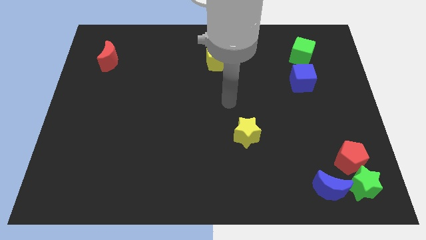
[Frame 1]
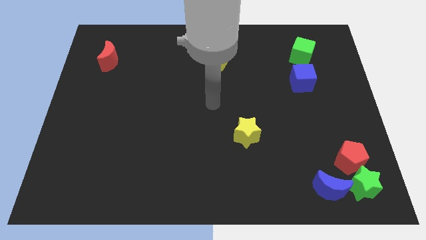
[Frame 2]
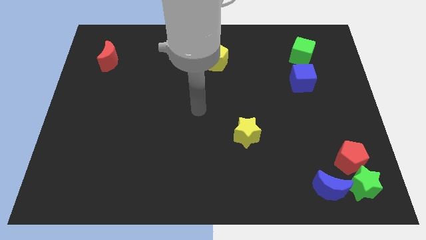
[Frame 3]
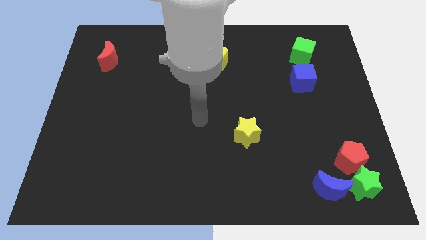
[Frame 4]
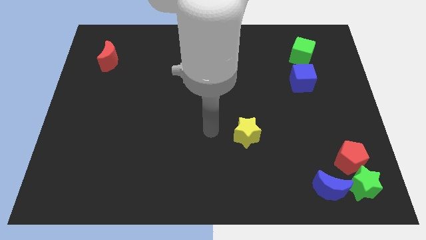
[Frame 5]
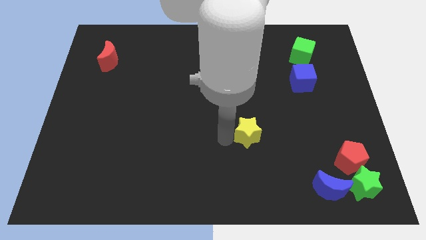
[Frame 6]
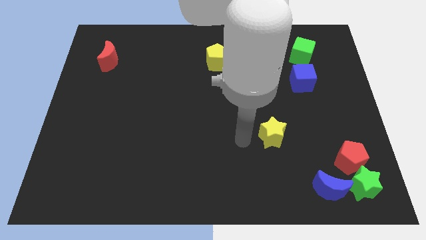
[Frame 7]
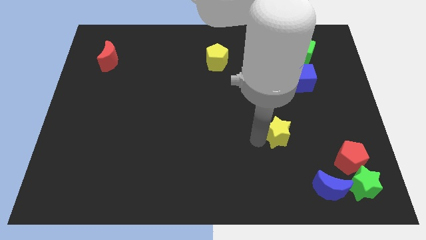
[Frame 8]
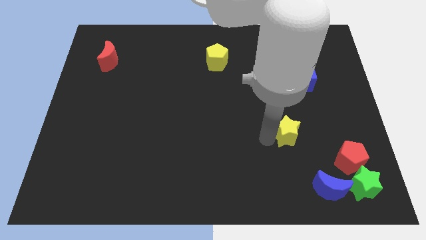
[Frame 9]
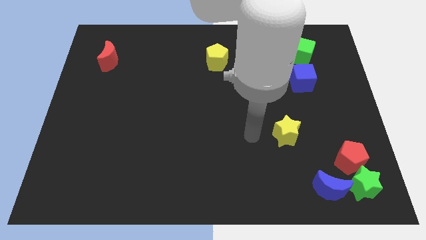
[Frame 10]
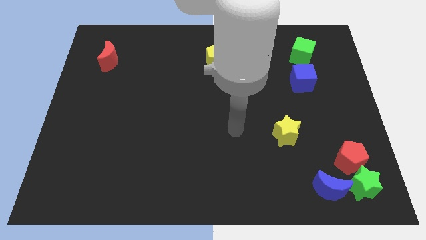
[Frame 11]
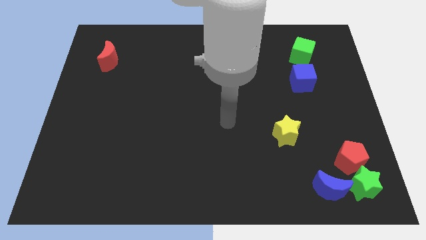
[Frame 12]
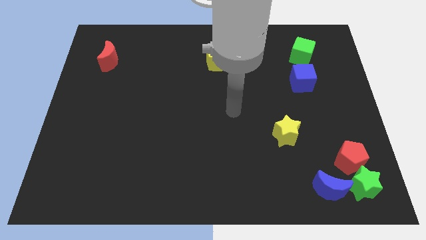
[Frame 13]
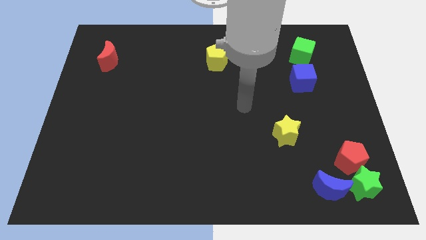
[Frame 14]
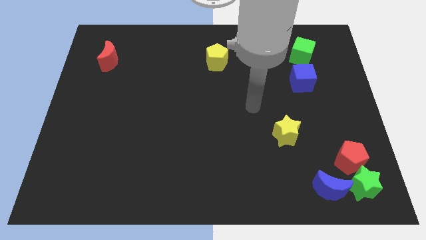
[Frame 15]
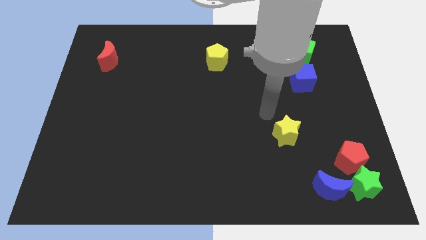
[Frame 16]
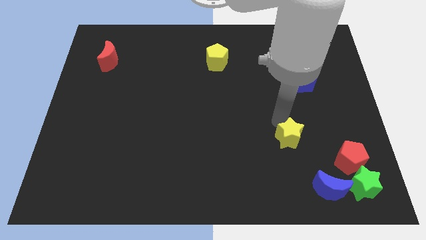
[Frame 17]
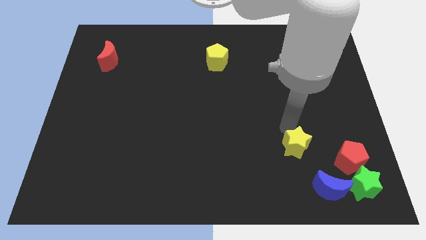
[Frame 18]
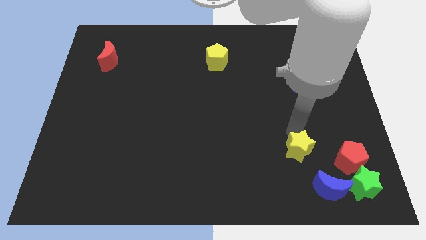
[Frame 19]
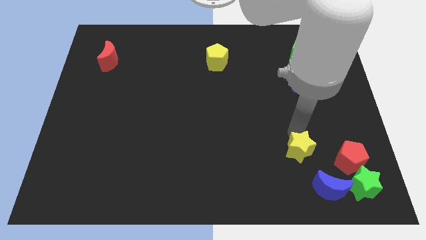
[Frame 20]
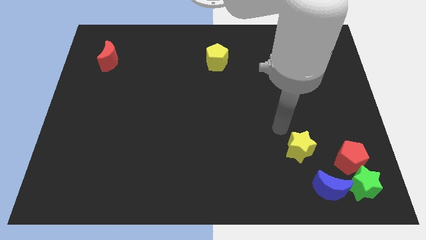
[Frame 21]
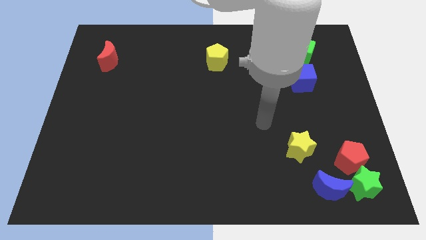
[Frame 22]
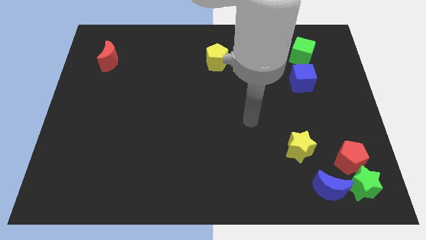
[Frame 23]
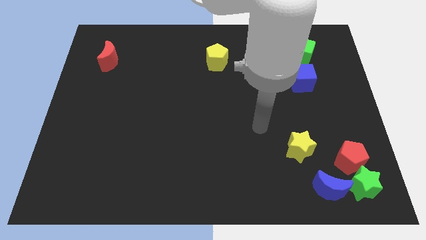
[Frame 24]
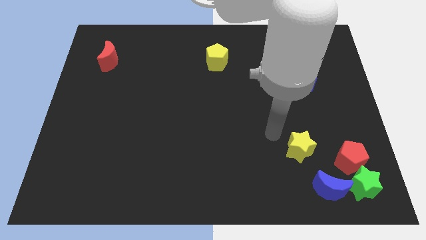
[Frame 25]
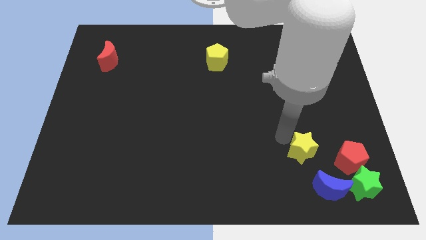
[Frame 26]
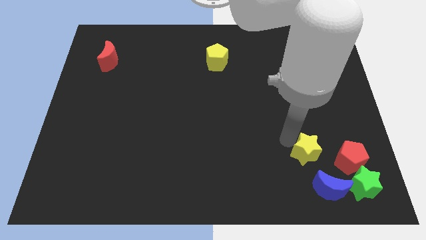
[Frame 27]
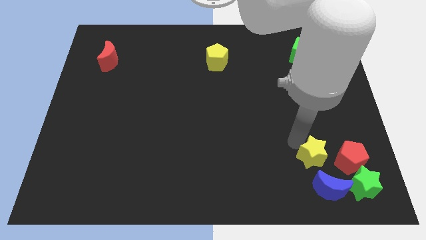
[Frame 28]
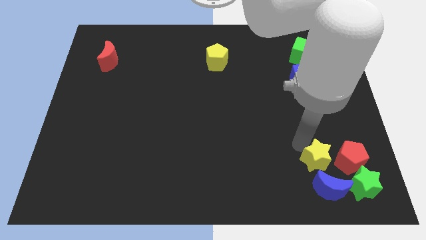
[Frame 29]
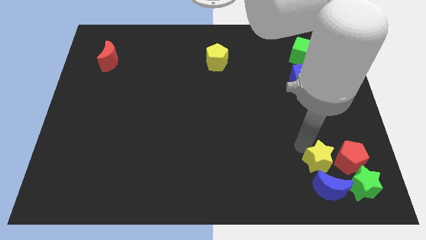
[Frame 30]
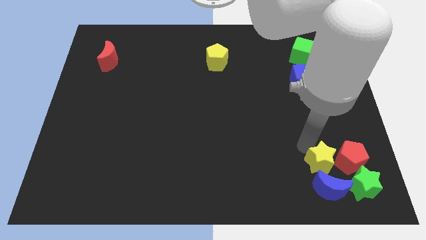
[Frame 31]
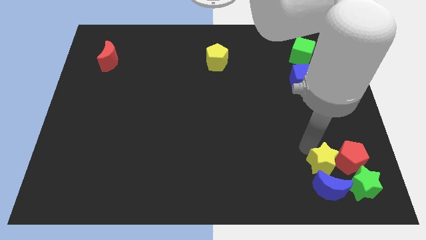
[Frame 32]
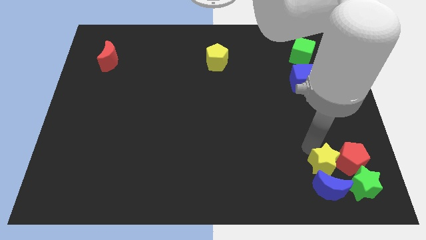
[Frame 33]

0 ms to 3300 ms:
drag the yellow star towards the top of the blue crescent

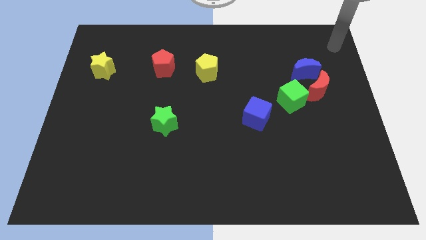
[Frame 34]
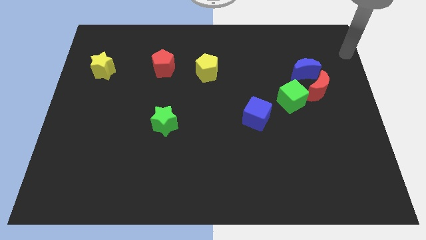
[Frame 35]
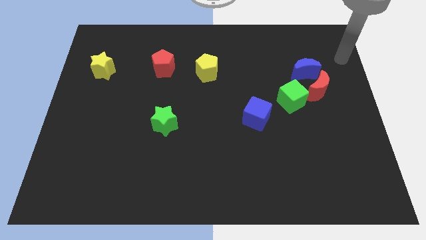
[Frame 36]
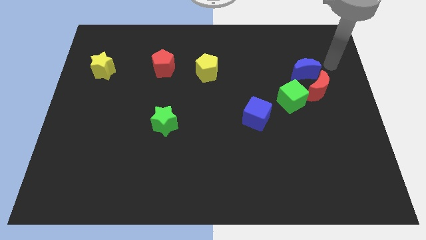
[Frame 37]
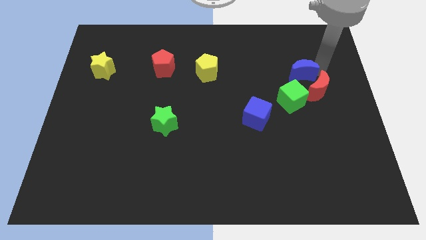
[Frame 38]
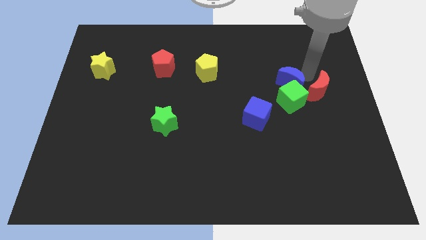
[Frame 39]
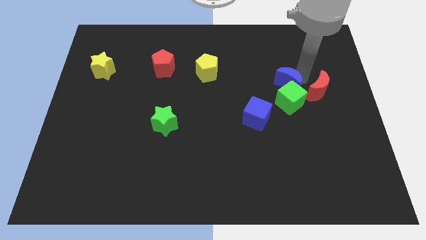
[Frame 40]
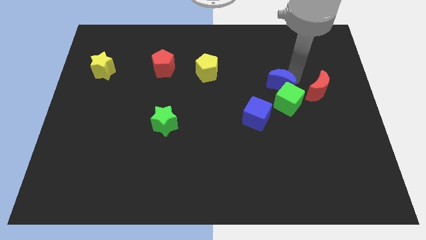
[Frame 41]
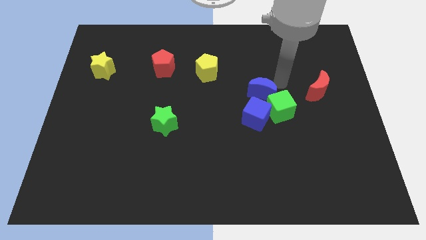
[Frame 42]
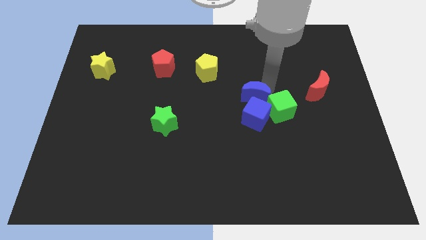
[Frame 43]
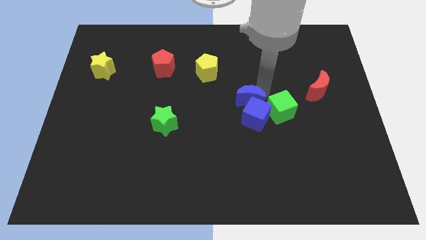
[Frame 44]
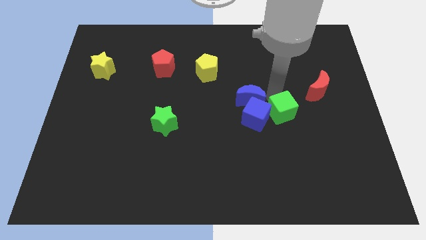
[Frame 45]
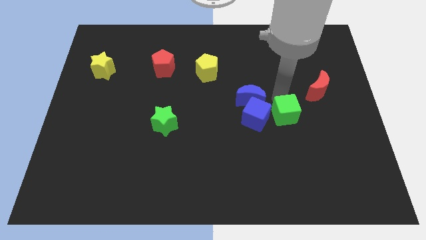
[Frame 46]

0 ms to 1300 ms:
push the blue moon into blue cube

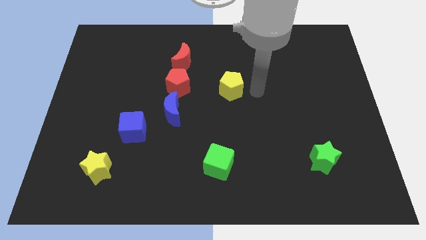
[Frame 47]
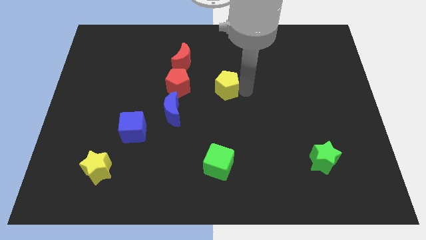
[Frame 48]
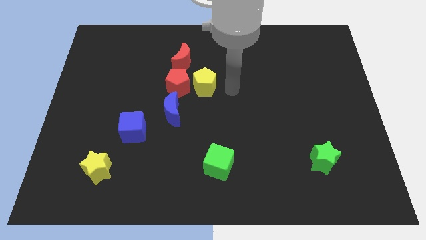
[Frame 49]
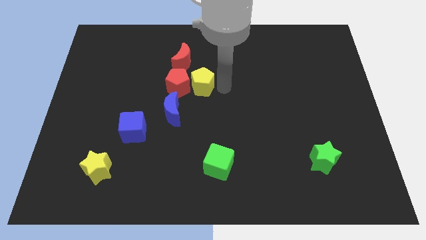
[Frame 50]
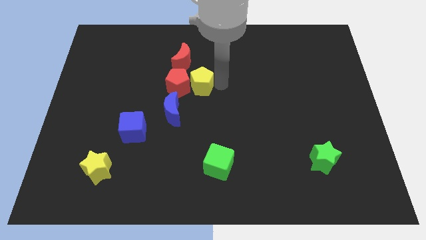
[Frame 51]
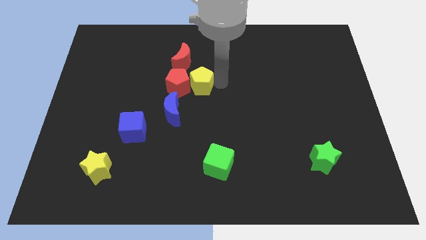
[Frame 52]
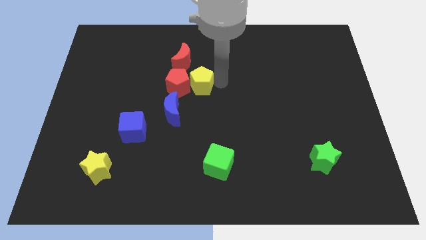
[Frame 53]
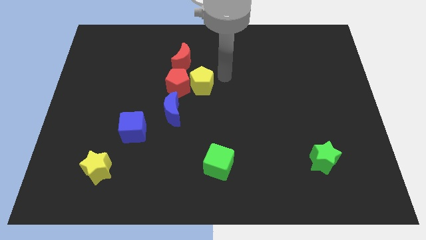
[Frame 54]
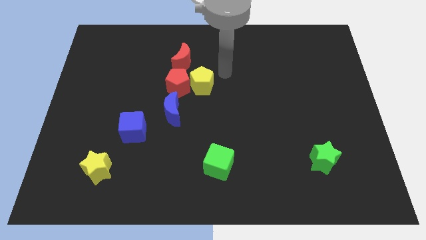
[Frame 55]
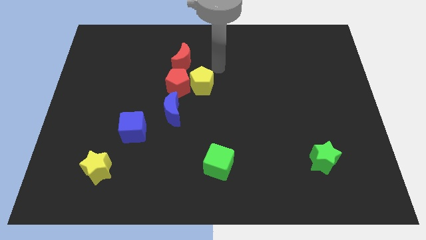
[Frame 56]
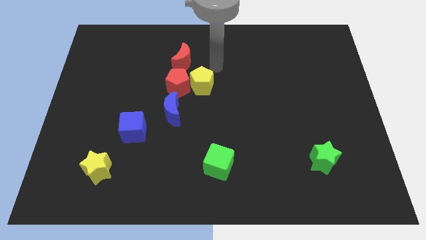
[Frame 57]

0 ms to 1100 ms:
push the yellow pentagon to the right of the red pentagon

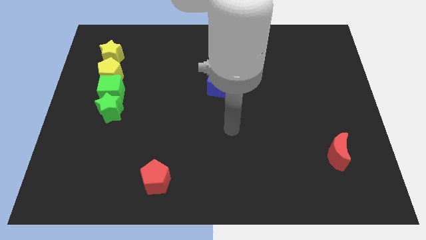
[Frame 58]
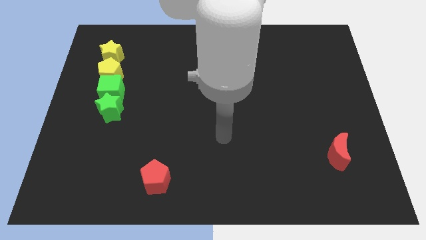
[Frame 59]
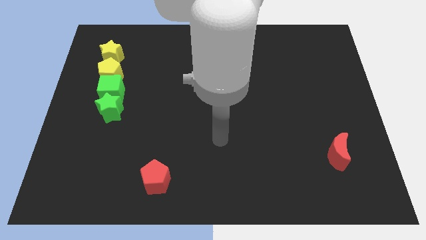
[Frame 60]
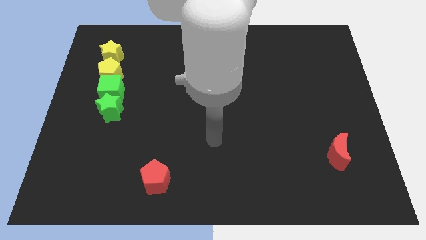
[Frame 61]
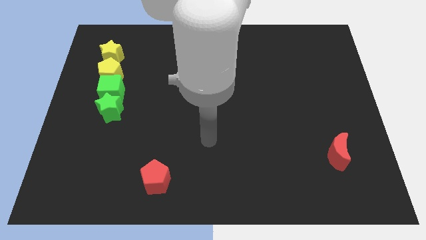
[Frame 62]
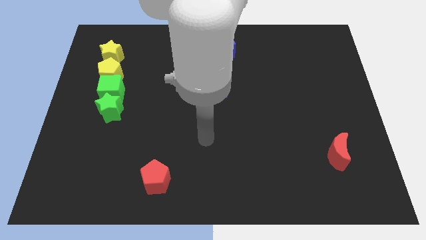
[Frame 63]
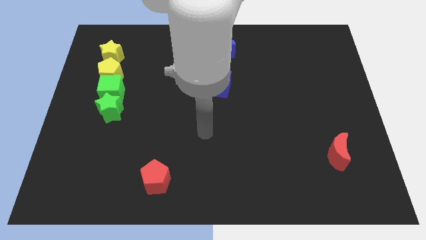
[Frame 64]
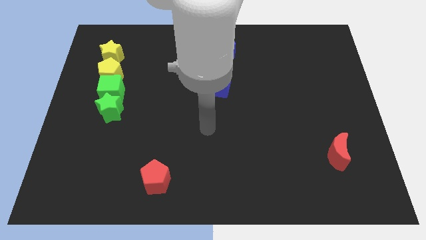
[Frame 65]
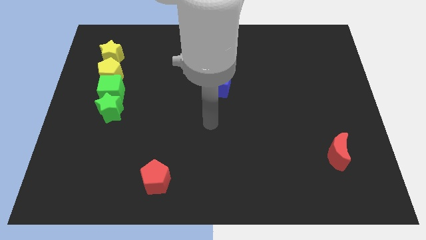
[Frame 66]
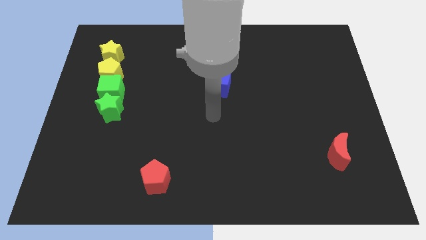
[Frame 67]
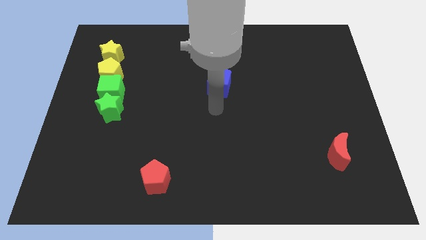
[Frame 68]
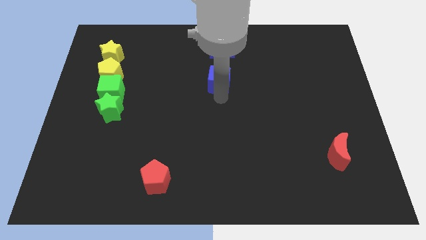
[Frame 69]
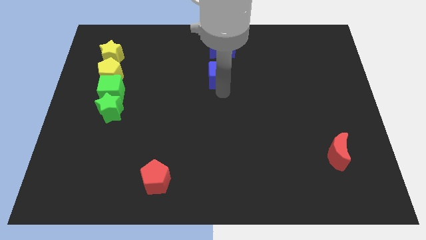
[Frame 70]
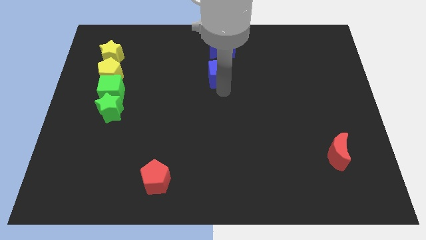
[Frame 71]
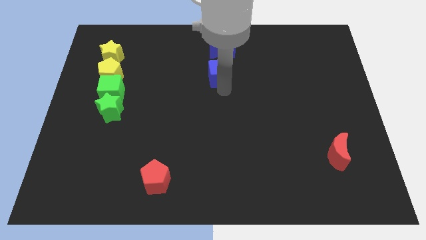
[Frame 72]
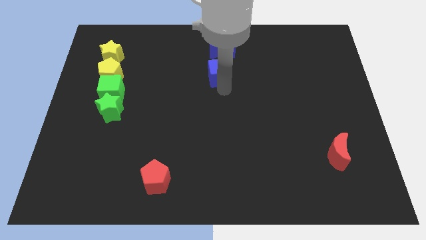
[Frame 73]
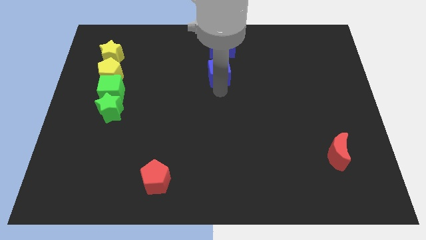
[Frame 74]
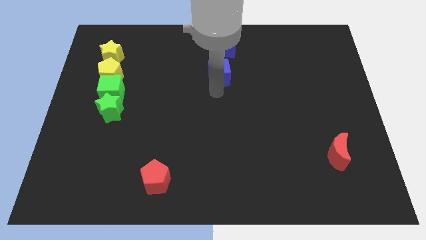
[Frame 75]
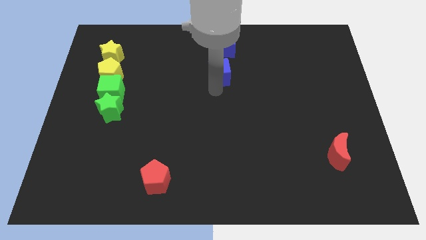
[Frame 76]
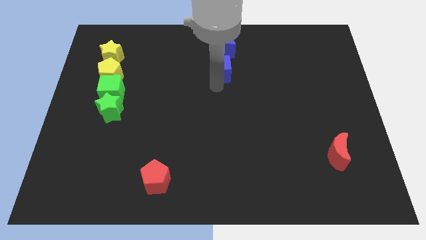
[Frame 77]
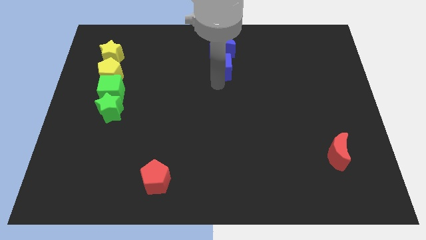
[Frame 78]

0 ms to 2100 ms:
place the blue cube below the blue crescent

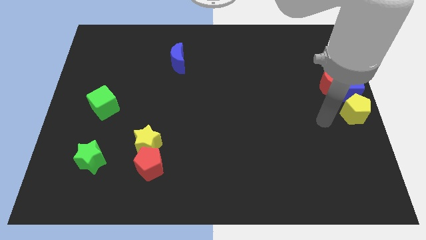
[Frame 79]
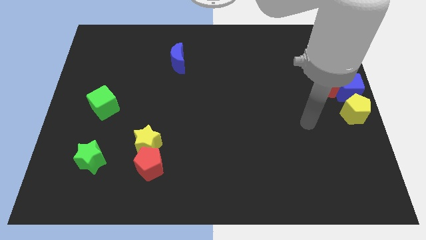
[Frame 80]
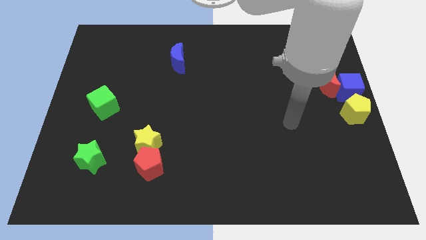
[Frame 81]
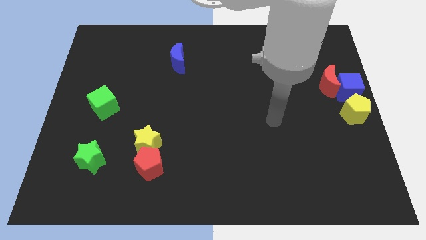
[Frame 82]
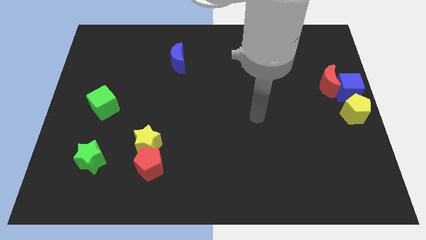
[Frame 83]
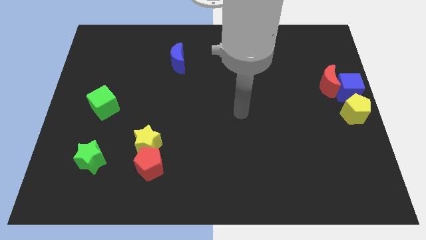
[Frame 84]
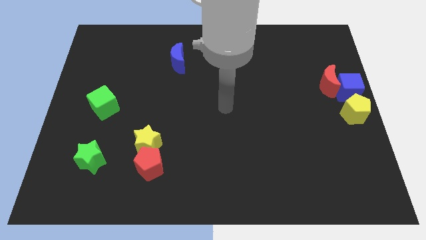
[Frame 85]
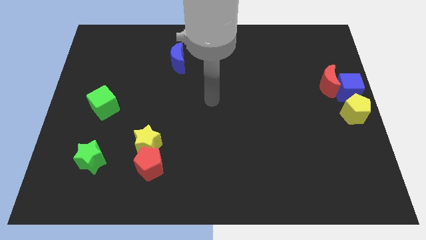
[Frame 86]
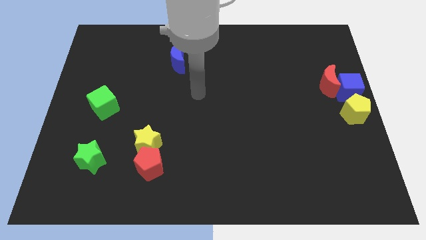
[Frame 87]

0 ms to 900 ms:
move arm at the center

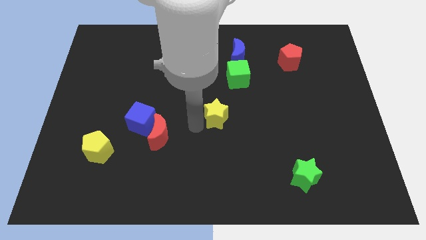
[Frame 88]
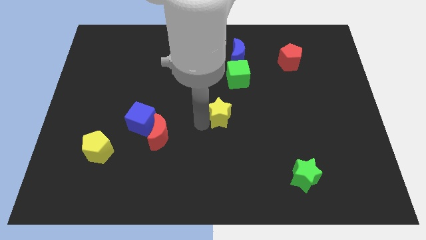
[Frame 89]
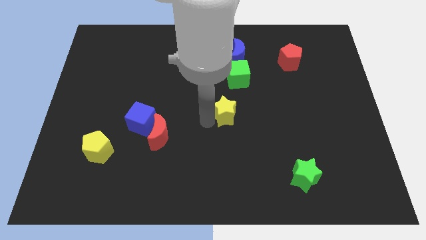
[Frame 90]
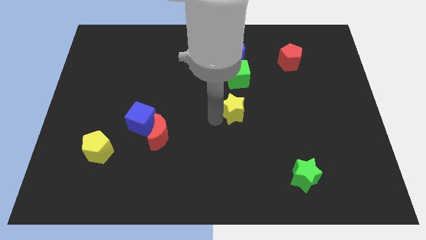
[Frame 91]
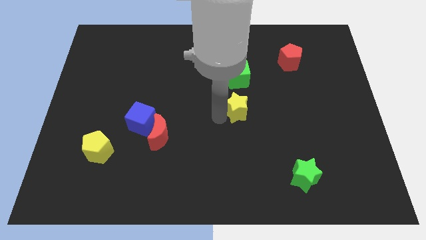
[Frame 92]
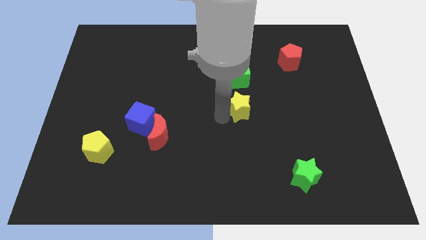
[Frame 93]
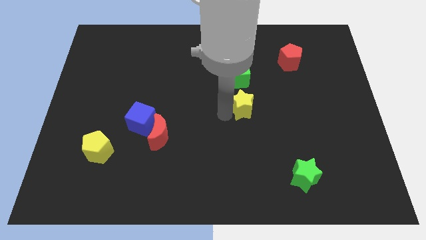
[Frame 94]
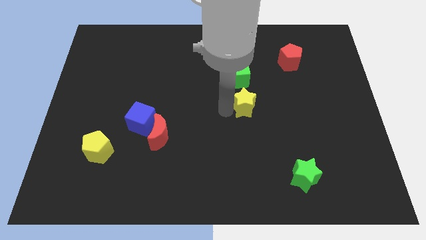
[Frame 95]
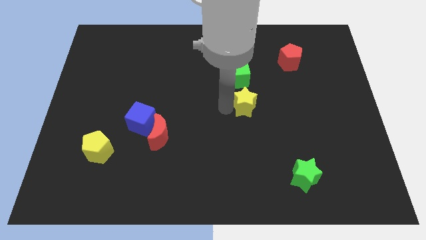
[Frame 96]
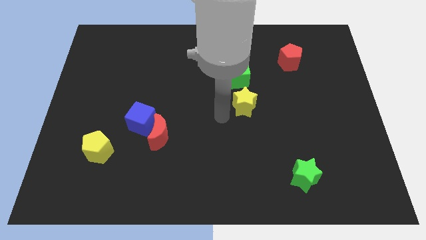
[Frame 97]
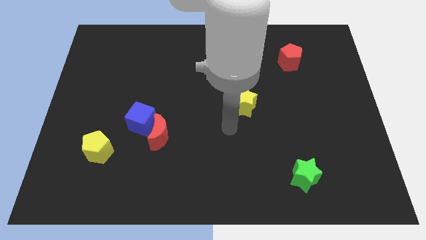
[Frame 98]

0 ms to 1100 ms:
move yellow star below green cube
